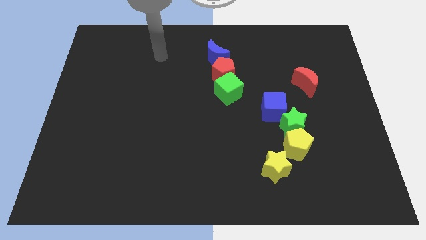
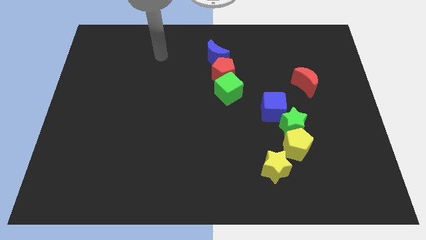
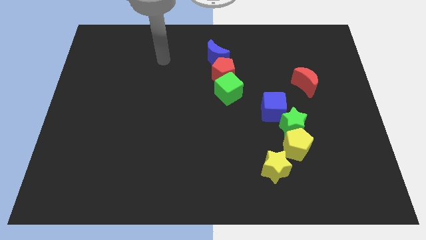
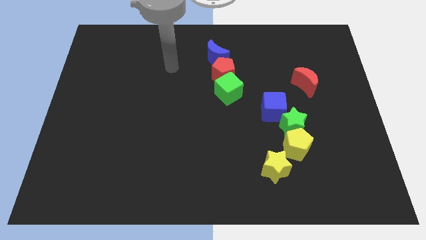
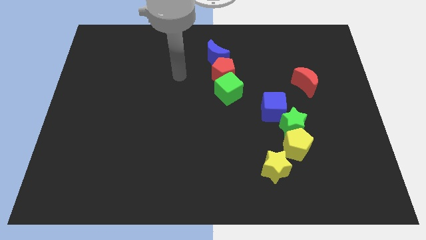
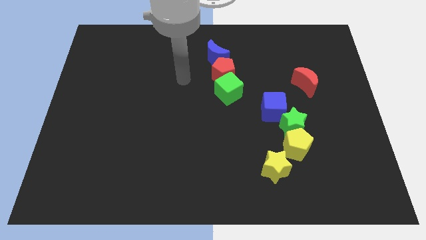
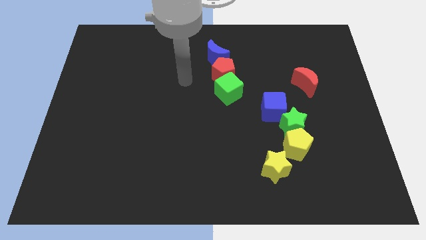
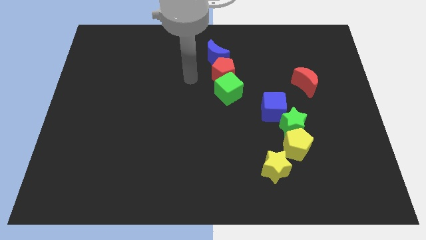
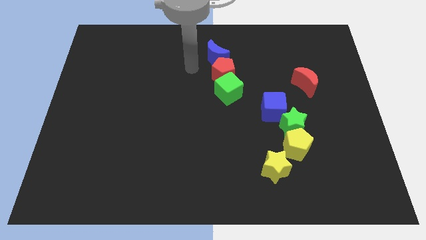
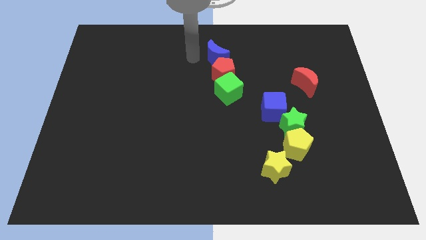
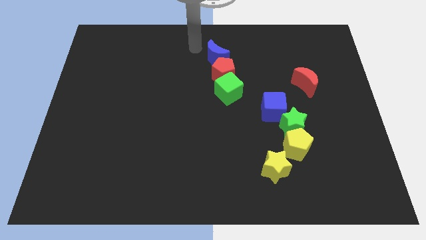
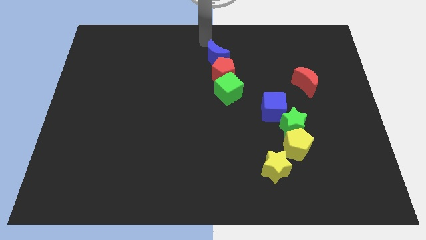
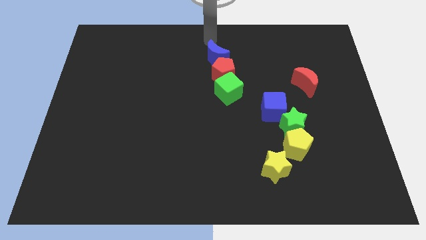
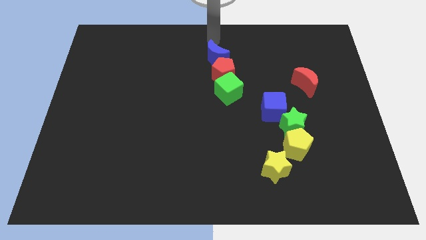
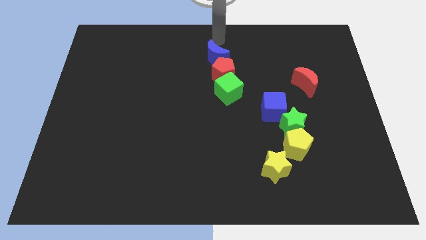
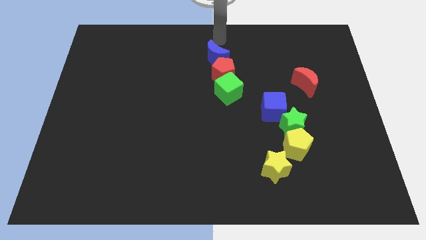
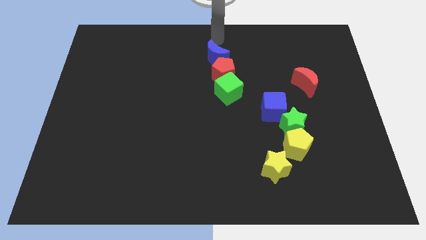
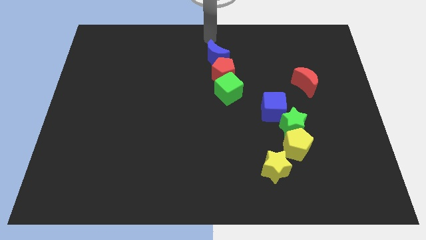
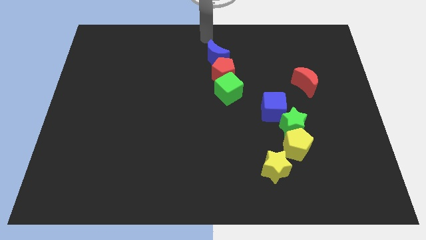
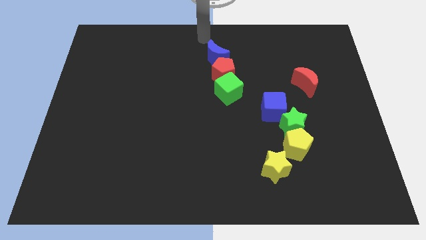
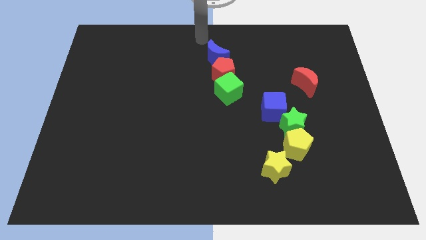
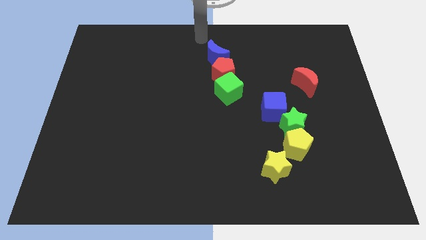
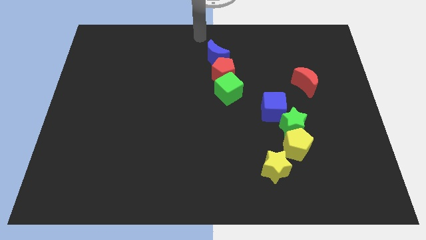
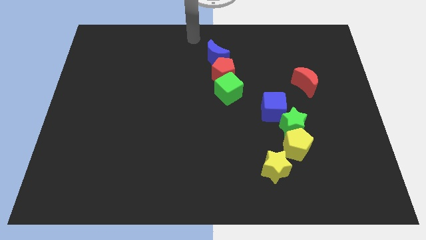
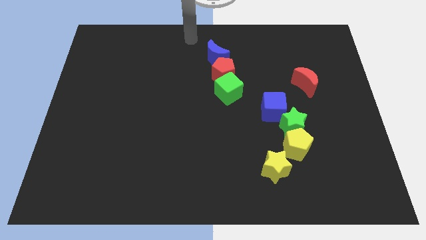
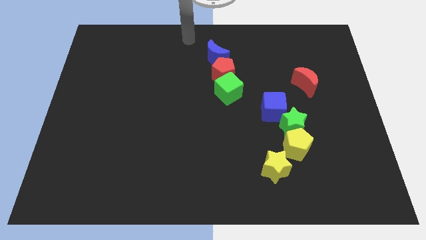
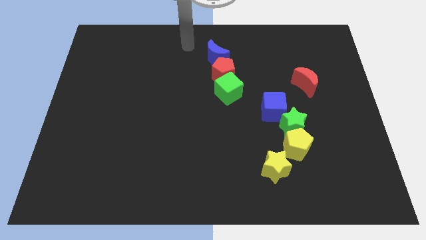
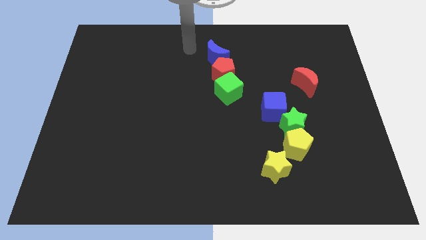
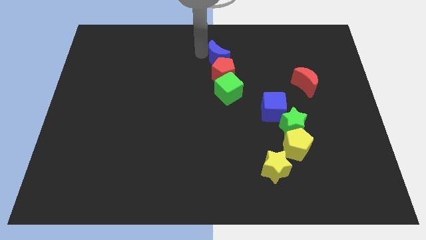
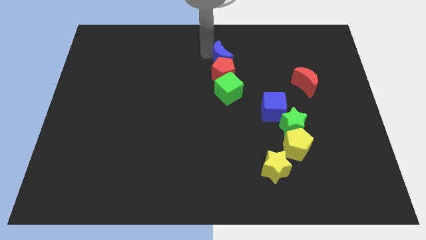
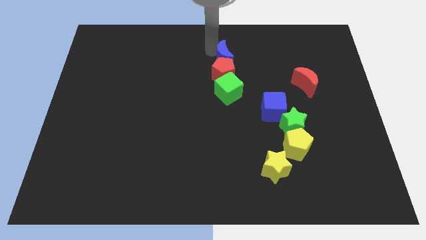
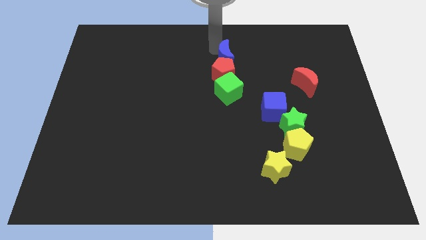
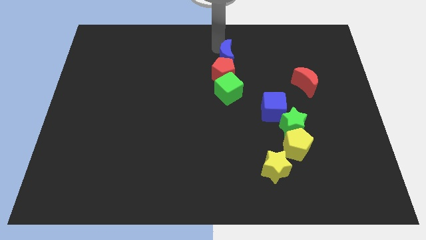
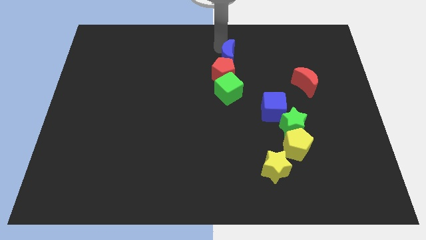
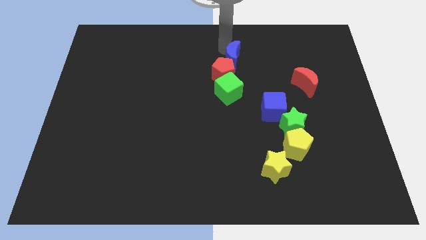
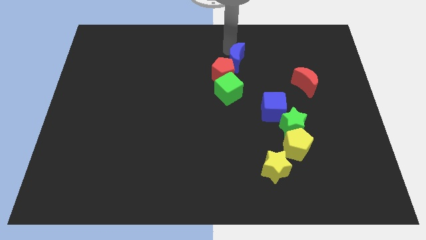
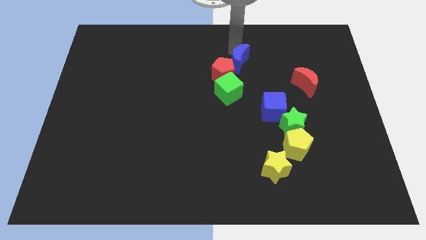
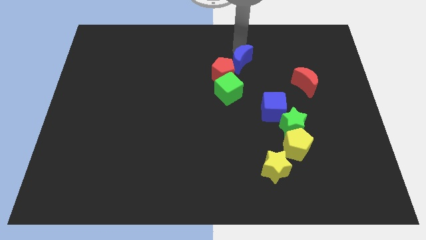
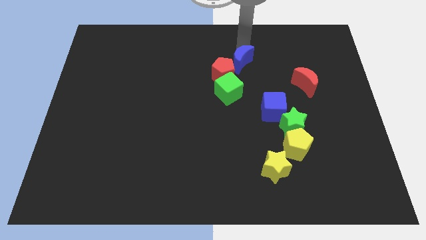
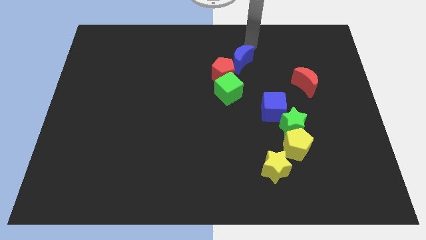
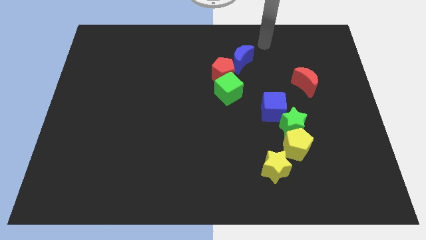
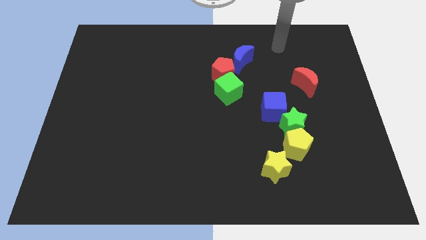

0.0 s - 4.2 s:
push the blue crescent slightly to the bottom

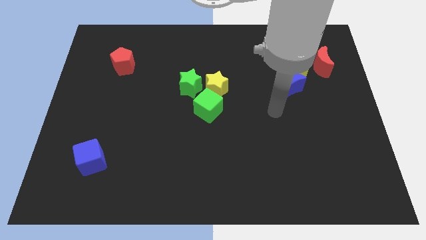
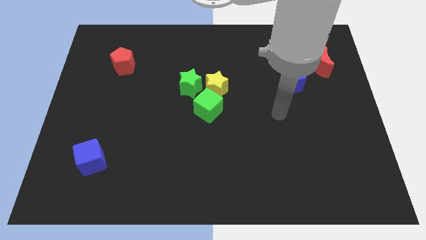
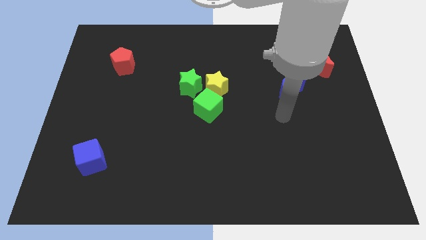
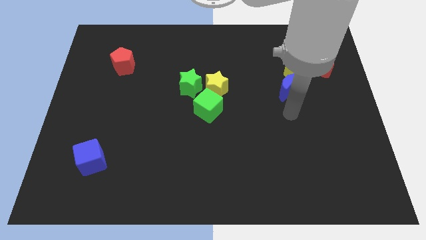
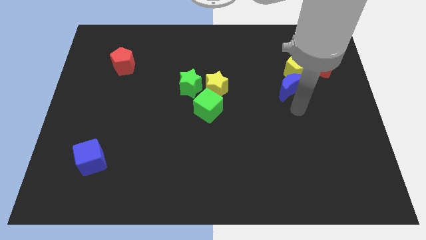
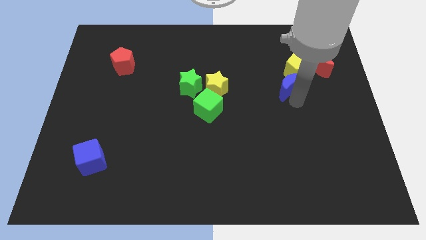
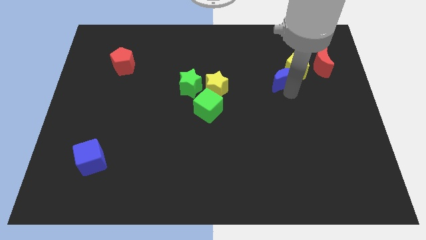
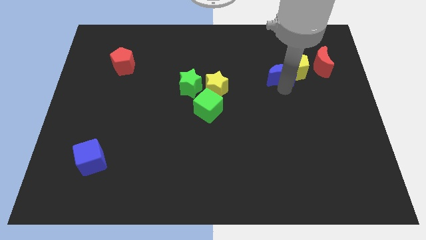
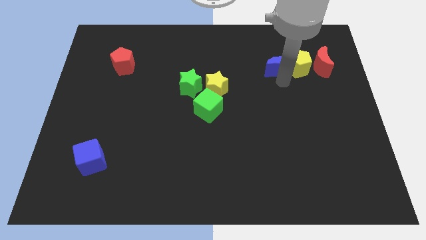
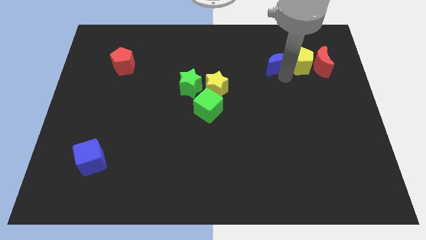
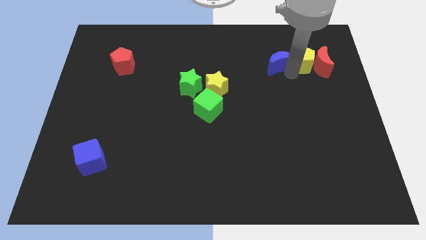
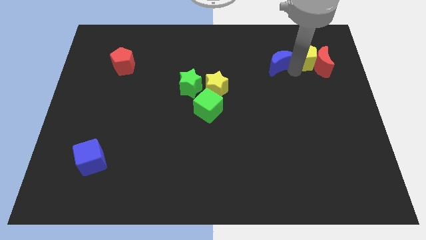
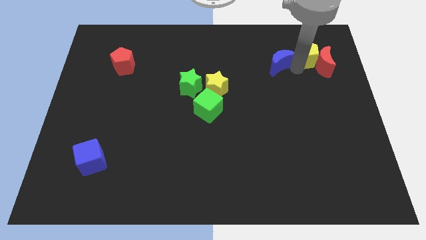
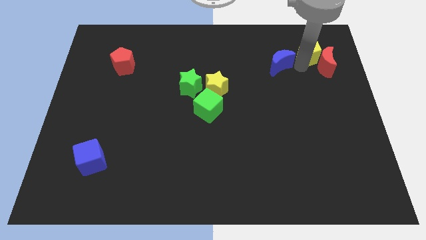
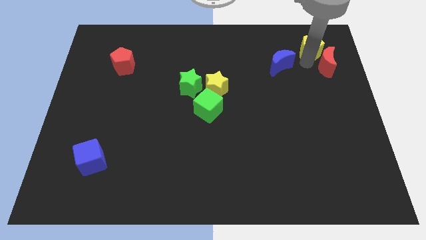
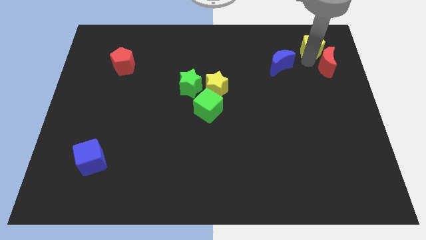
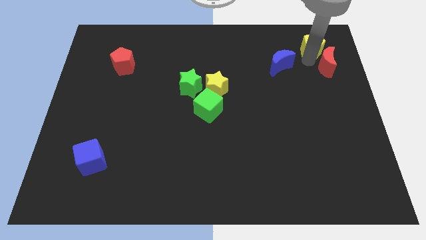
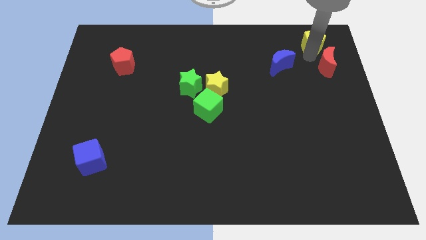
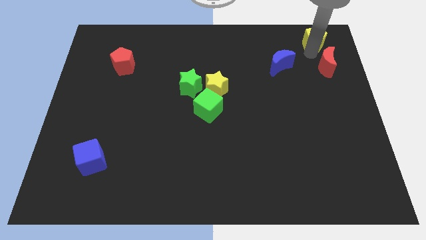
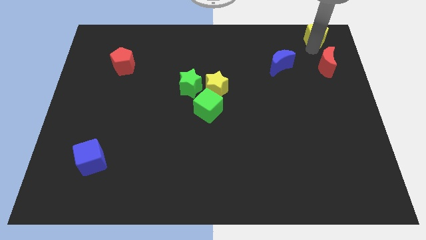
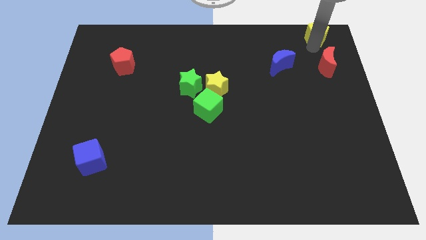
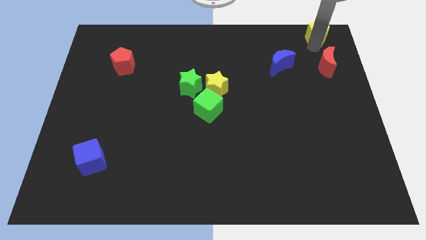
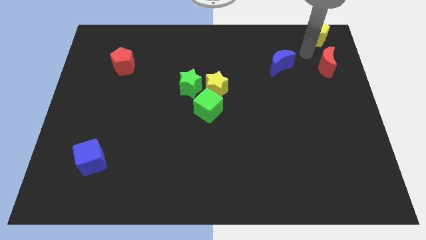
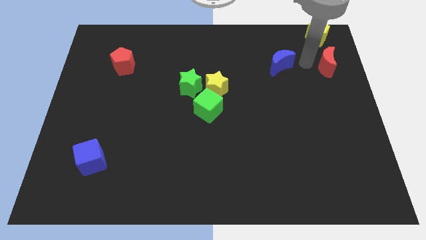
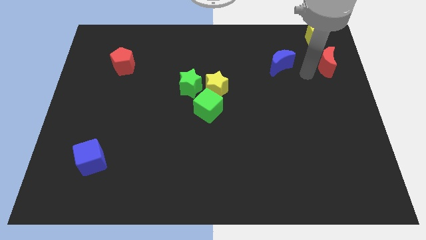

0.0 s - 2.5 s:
place the yellow pentagon to the top right of the board

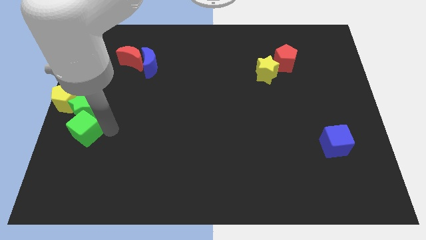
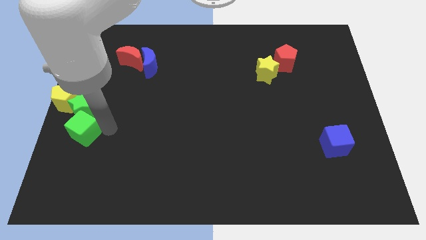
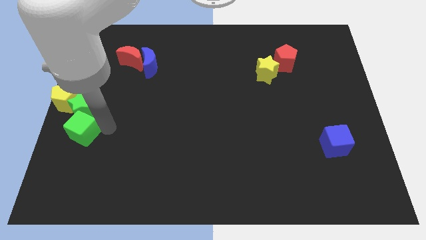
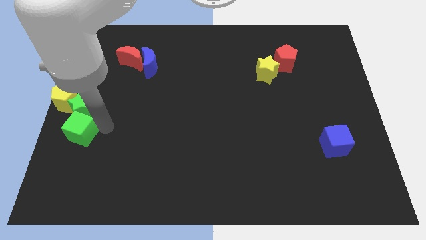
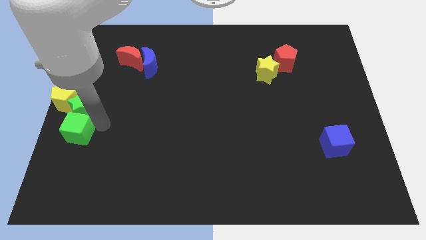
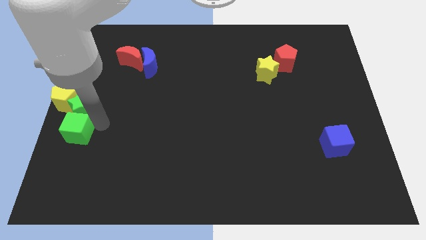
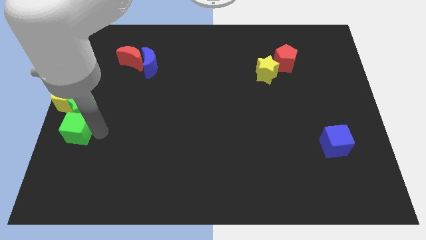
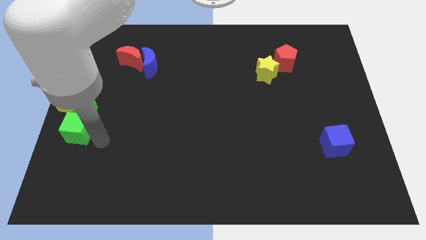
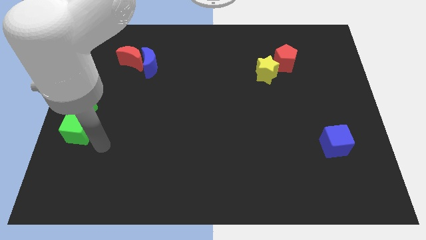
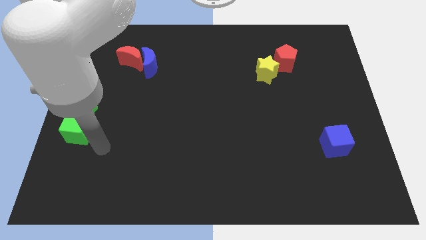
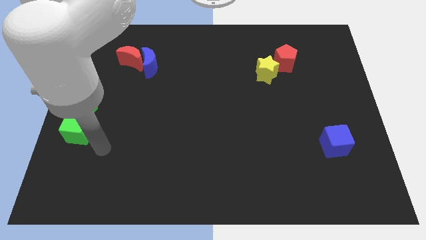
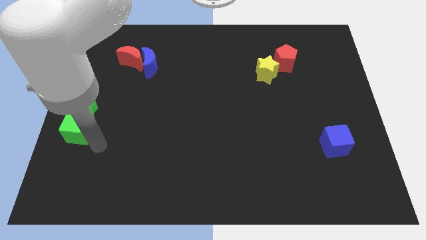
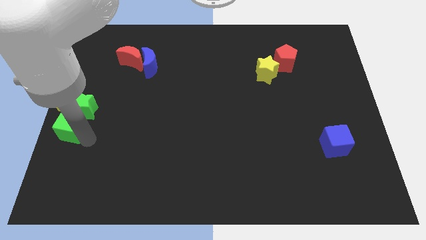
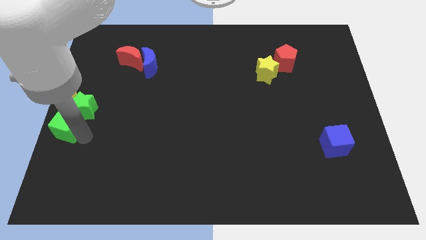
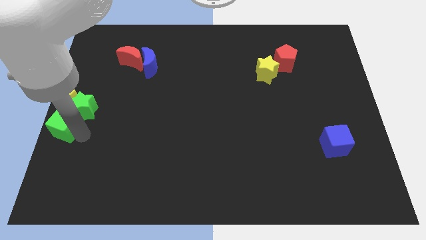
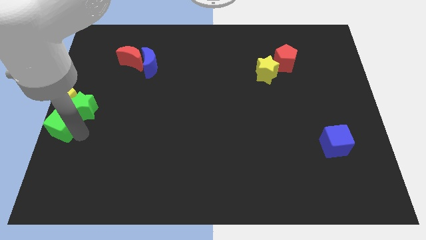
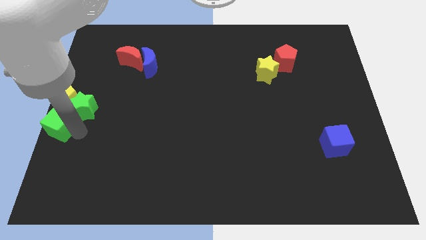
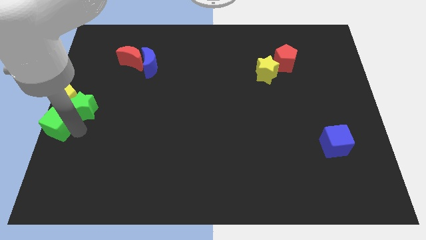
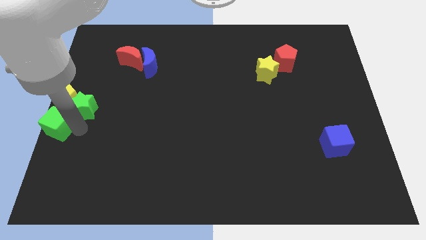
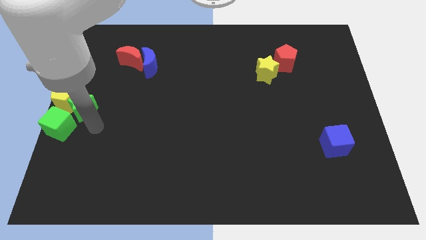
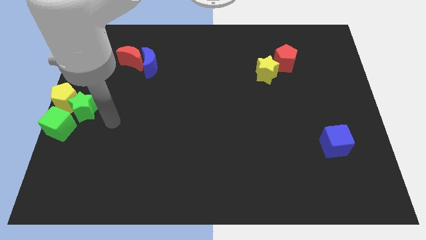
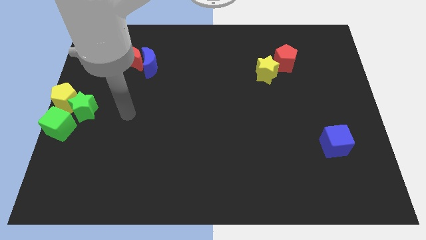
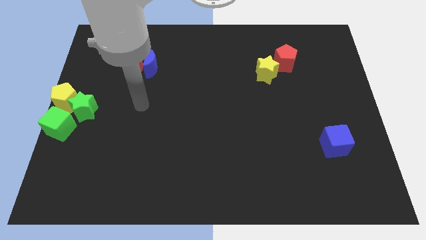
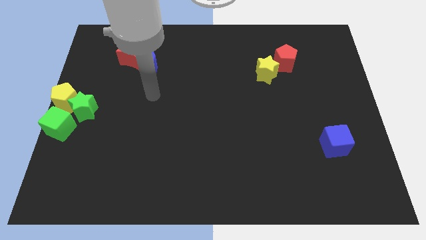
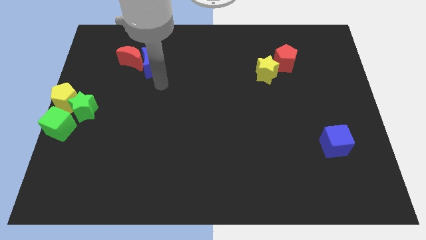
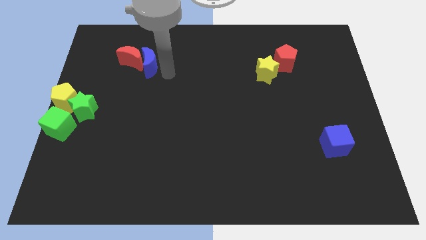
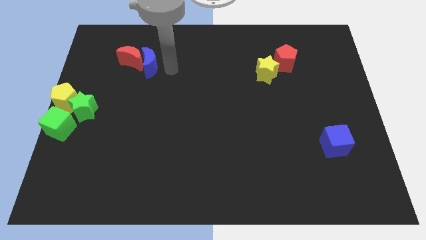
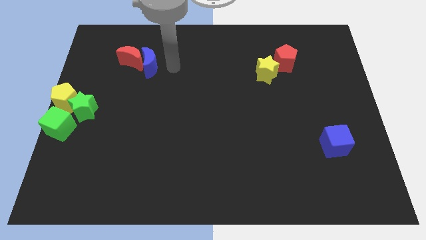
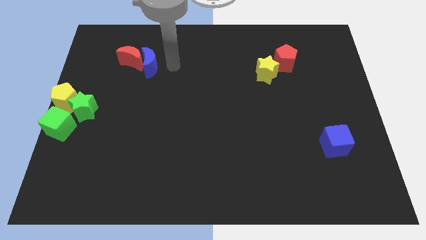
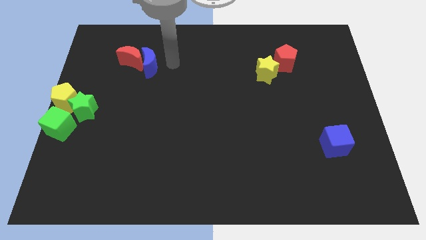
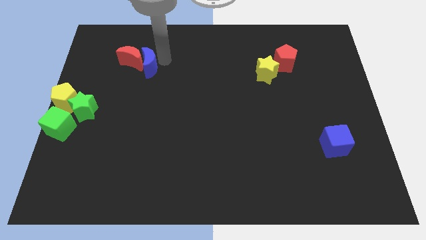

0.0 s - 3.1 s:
place the green cube at the center left of the board
